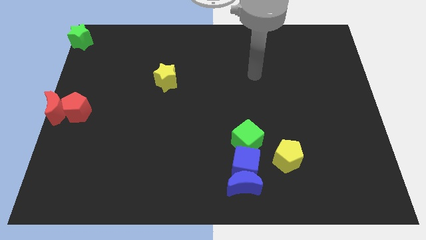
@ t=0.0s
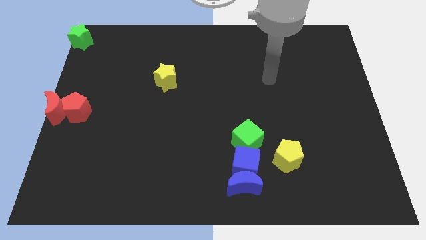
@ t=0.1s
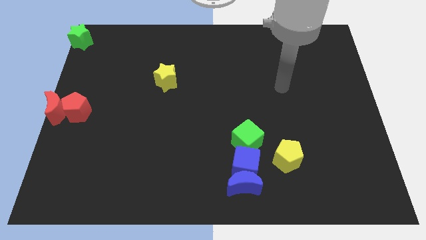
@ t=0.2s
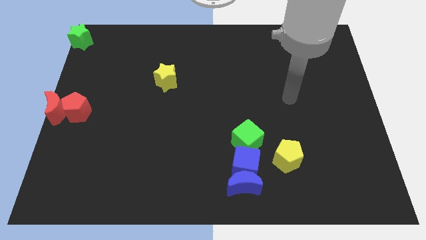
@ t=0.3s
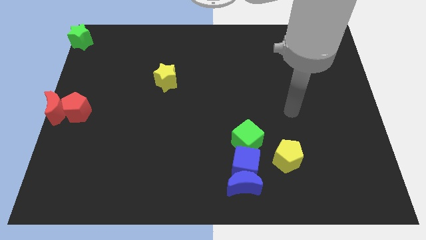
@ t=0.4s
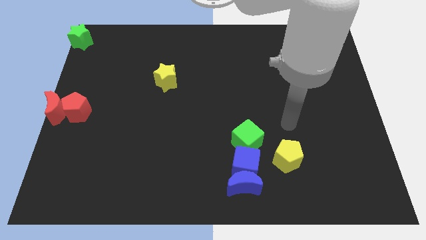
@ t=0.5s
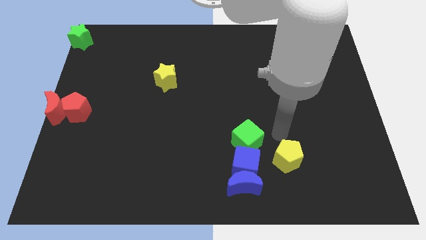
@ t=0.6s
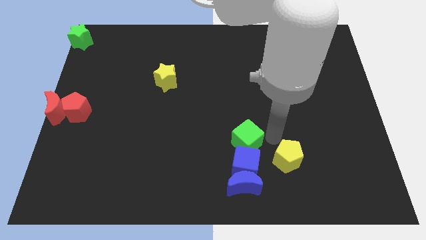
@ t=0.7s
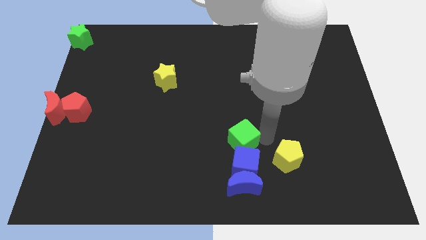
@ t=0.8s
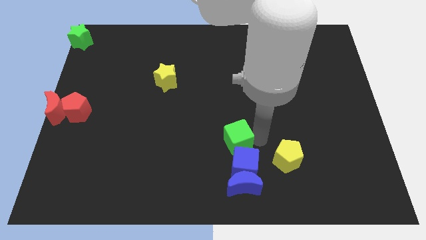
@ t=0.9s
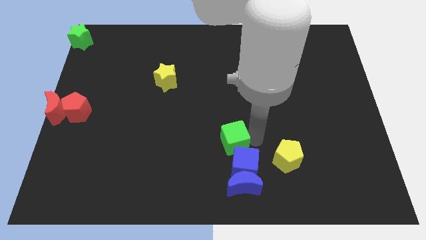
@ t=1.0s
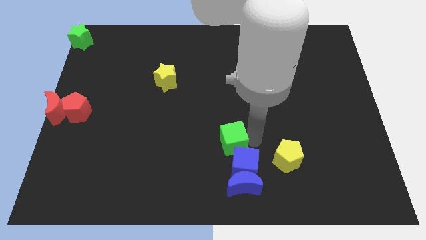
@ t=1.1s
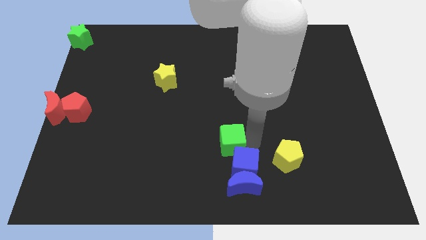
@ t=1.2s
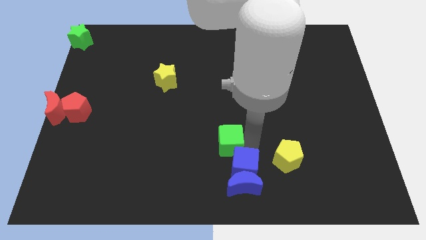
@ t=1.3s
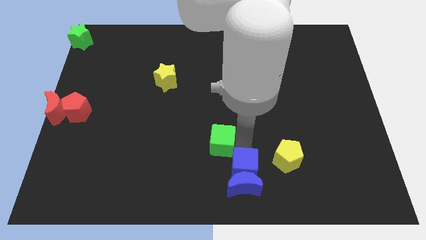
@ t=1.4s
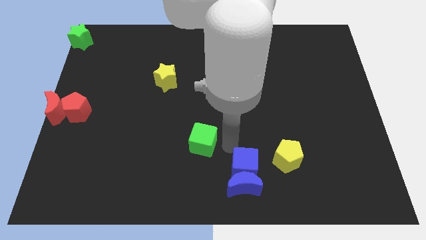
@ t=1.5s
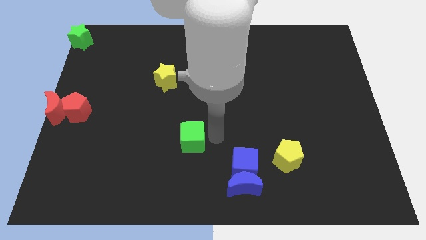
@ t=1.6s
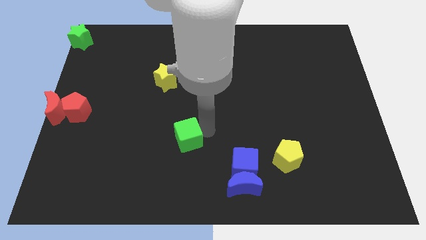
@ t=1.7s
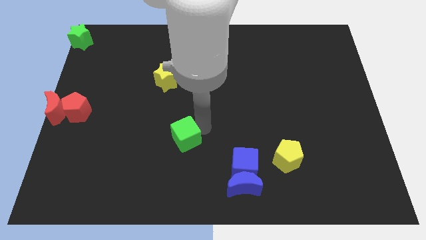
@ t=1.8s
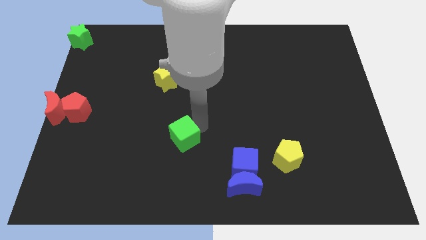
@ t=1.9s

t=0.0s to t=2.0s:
separate the green cube from the blue cube

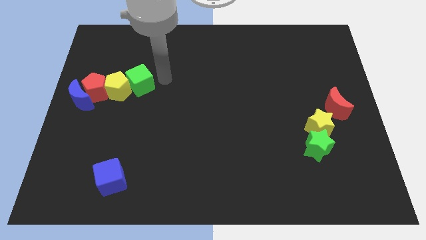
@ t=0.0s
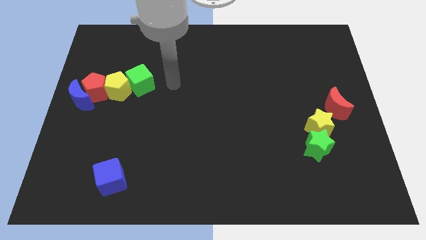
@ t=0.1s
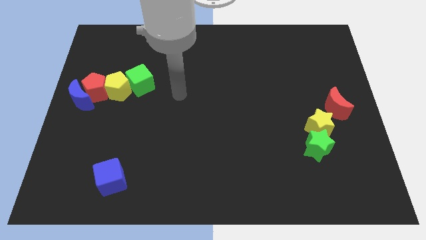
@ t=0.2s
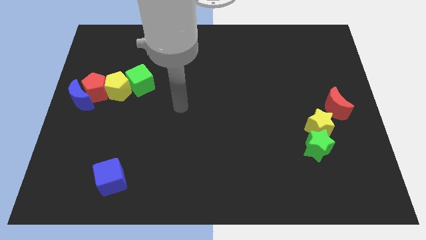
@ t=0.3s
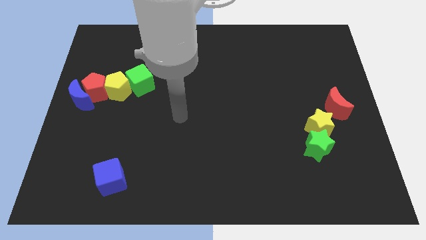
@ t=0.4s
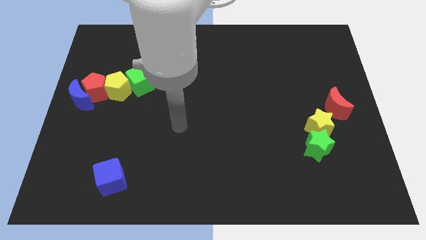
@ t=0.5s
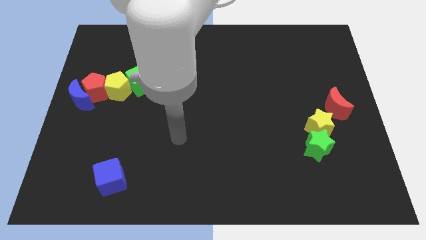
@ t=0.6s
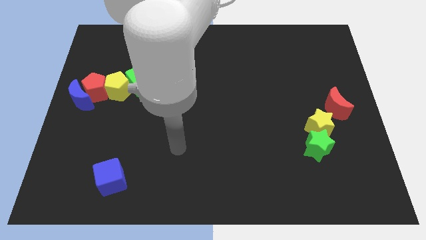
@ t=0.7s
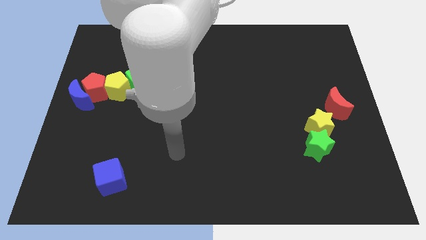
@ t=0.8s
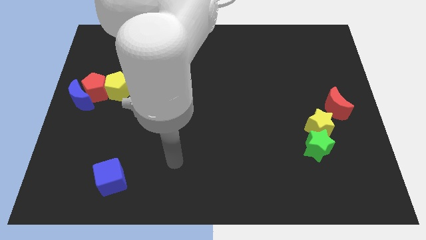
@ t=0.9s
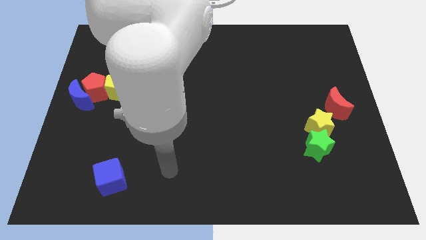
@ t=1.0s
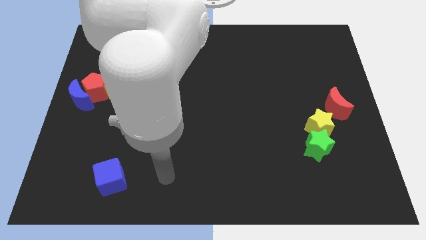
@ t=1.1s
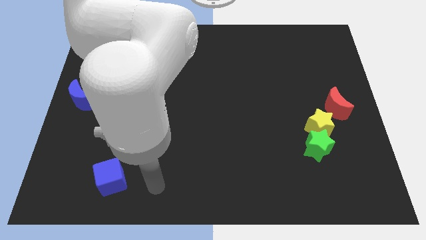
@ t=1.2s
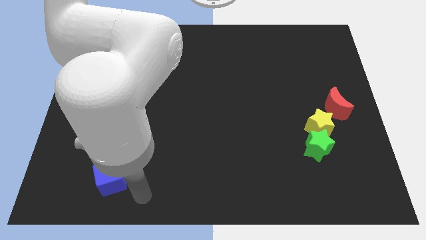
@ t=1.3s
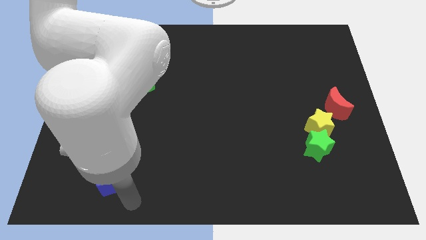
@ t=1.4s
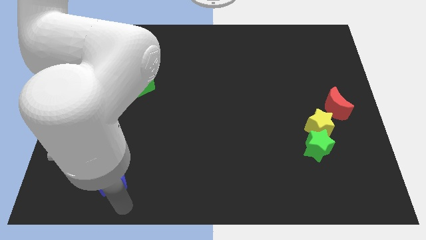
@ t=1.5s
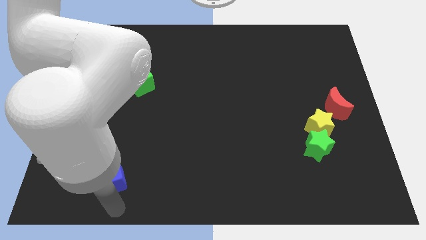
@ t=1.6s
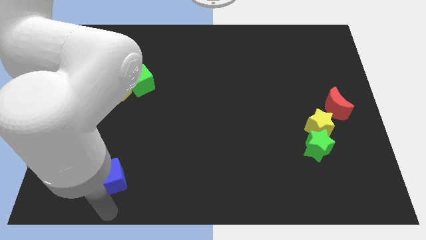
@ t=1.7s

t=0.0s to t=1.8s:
point your arm at the bottom of the blue cube

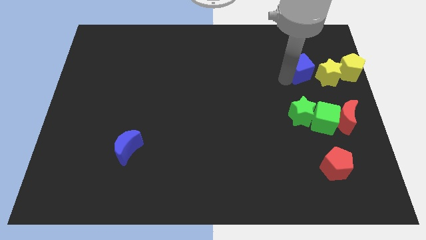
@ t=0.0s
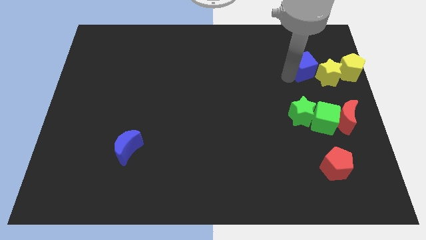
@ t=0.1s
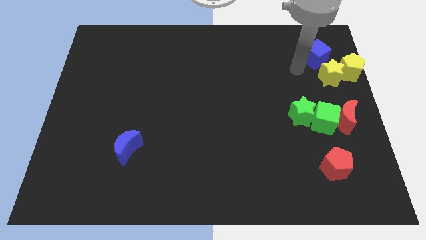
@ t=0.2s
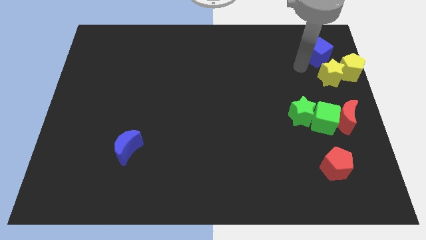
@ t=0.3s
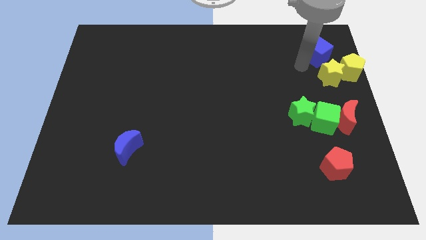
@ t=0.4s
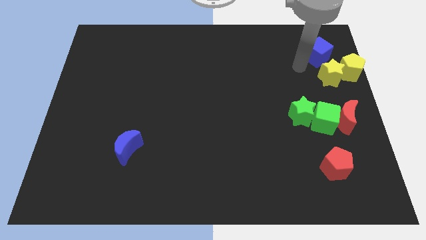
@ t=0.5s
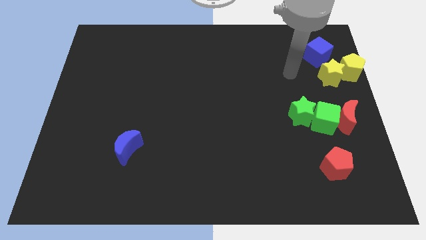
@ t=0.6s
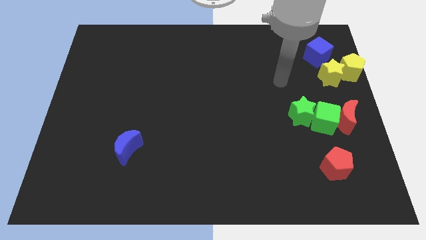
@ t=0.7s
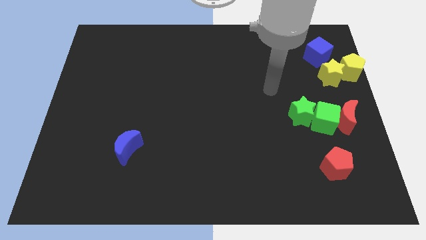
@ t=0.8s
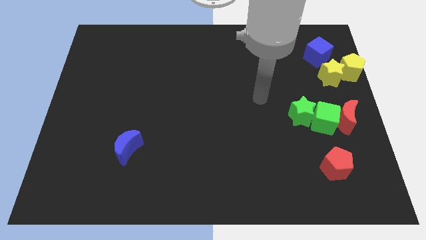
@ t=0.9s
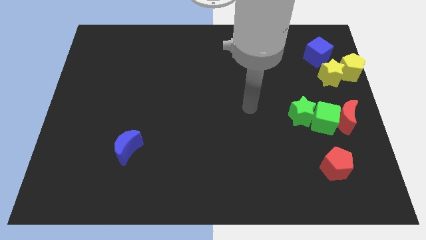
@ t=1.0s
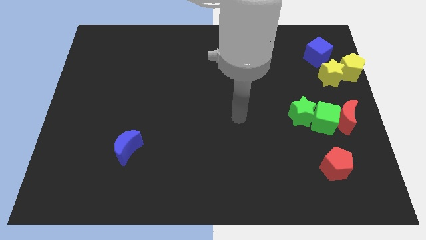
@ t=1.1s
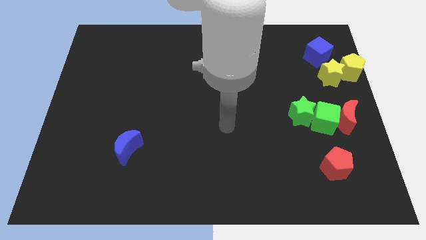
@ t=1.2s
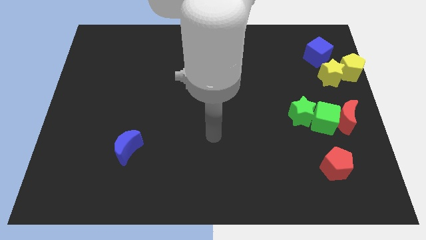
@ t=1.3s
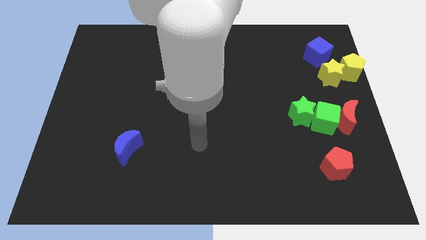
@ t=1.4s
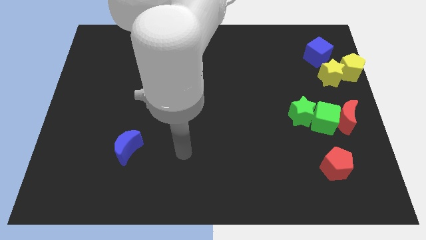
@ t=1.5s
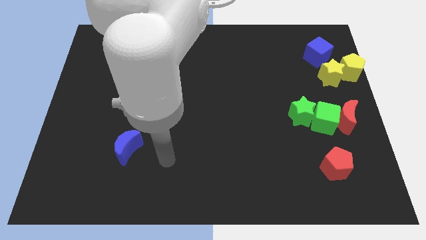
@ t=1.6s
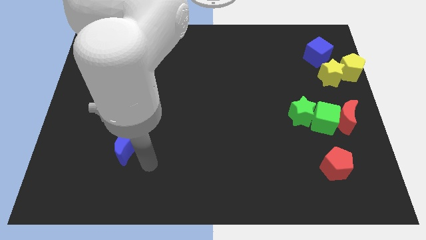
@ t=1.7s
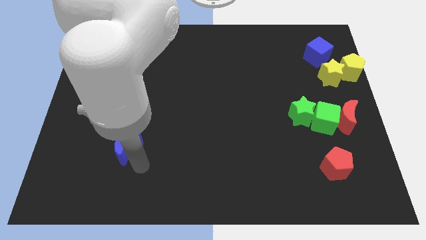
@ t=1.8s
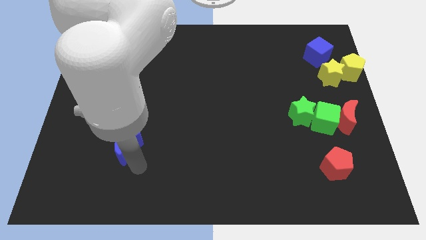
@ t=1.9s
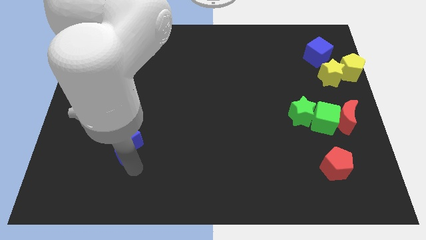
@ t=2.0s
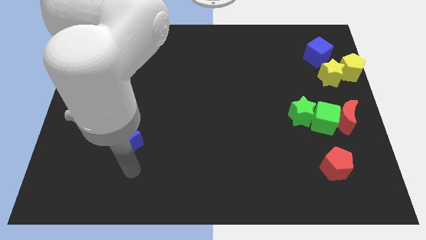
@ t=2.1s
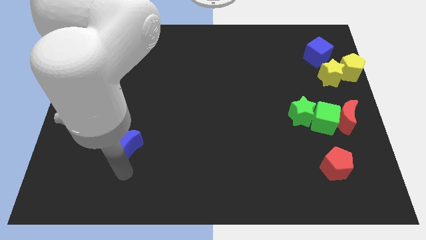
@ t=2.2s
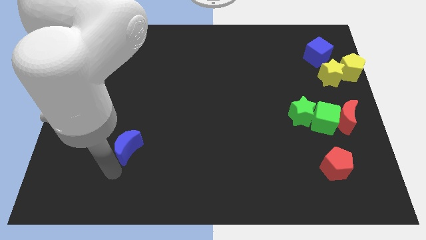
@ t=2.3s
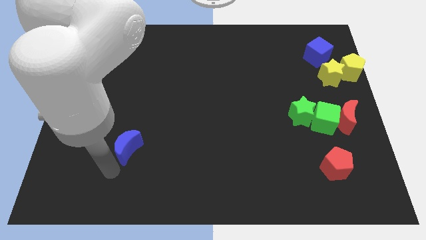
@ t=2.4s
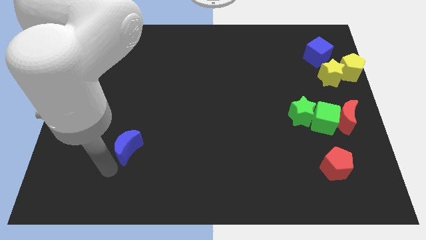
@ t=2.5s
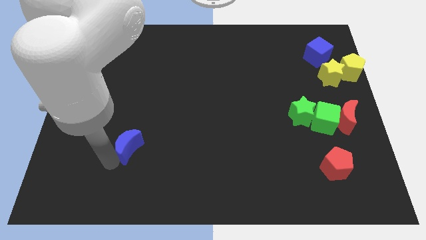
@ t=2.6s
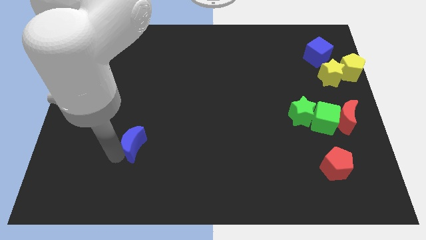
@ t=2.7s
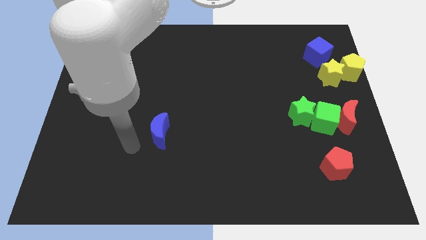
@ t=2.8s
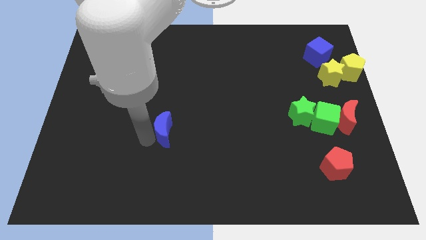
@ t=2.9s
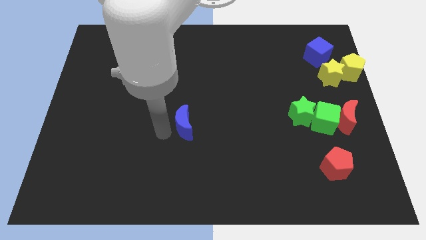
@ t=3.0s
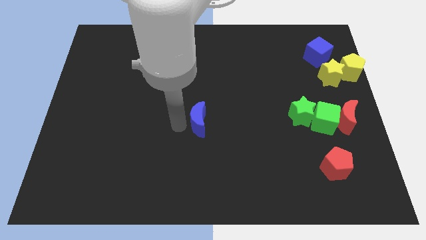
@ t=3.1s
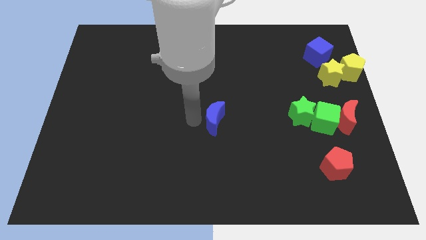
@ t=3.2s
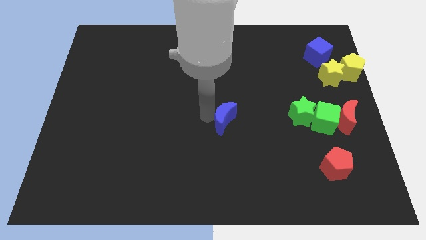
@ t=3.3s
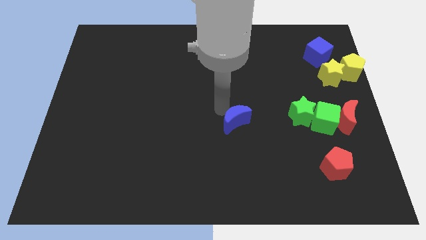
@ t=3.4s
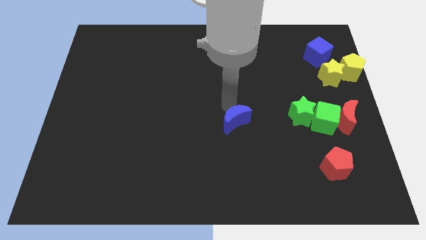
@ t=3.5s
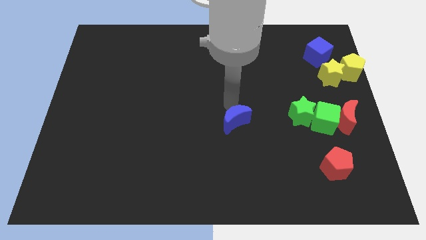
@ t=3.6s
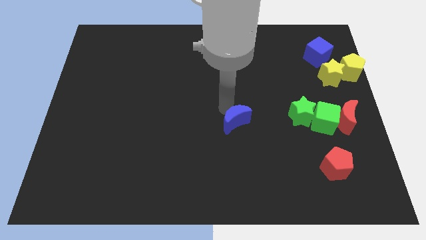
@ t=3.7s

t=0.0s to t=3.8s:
push blue crescent beside green star

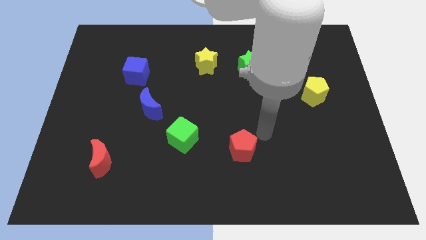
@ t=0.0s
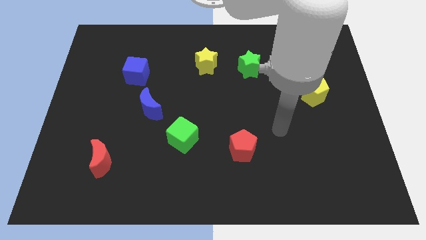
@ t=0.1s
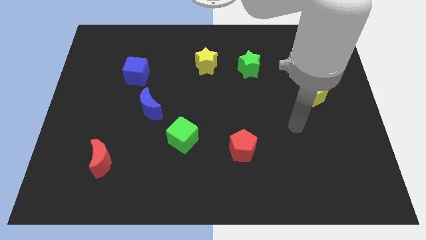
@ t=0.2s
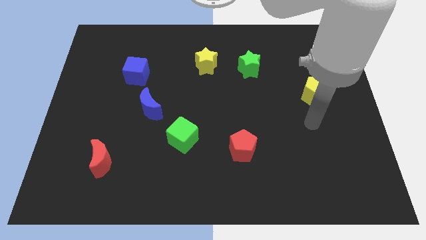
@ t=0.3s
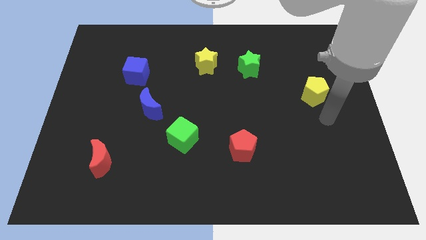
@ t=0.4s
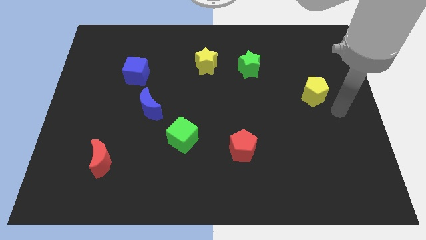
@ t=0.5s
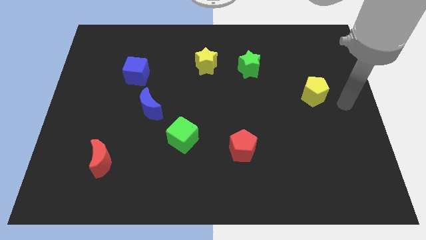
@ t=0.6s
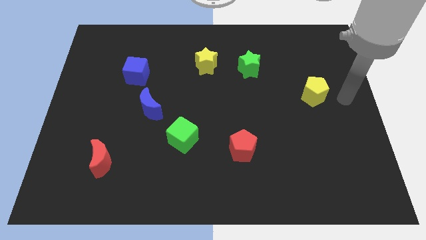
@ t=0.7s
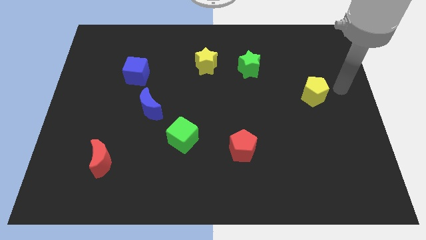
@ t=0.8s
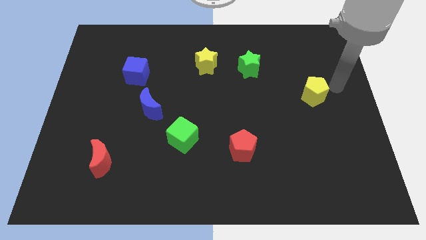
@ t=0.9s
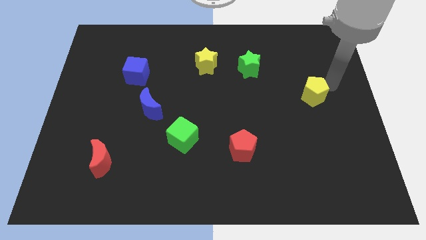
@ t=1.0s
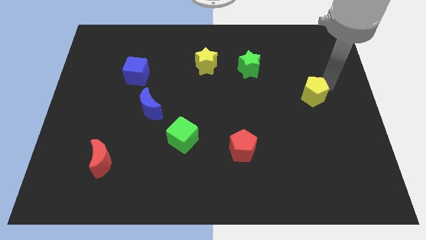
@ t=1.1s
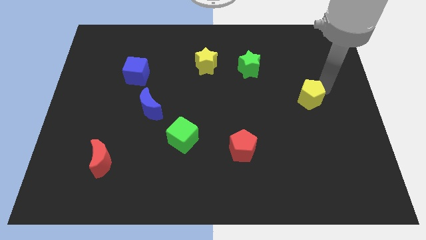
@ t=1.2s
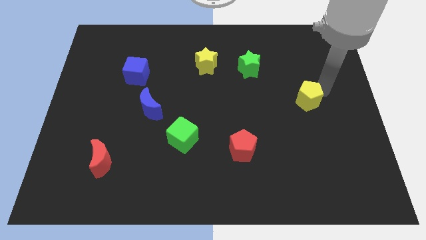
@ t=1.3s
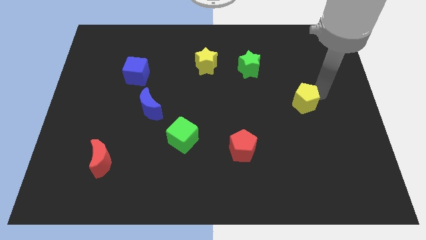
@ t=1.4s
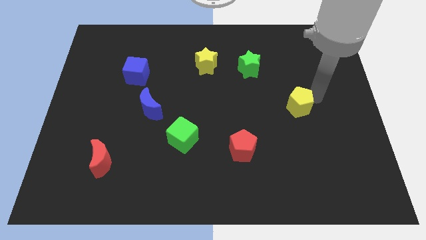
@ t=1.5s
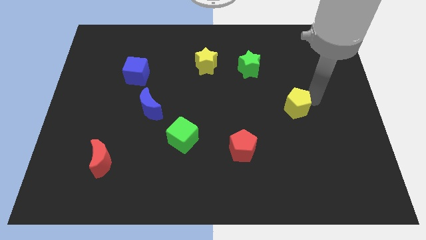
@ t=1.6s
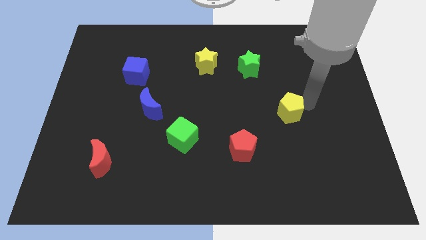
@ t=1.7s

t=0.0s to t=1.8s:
move the yellow pentagon slightly down to top right of red pentagon
